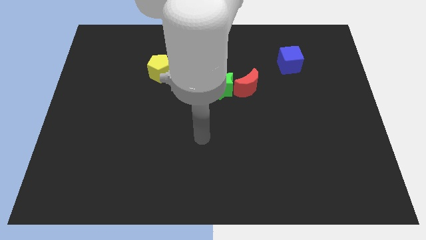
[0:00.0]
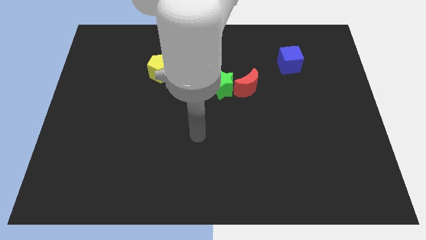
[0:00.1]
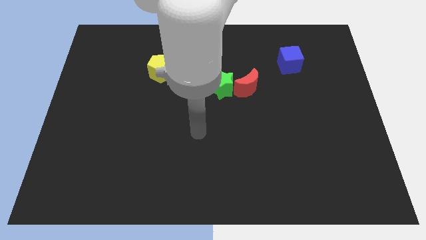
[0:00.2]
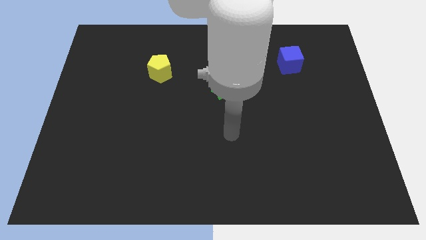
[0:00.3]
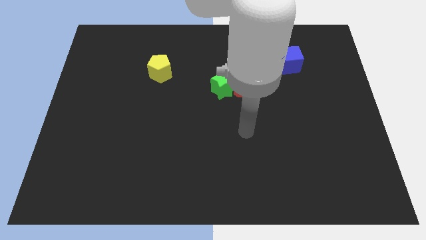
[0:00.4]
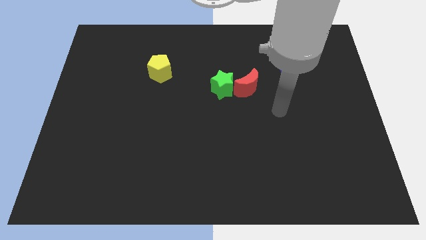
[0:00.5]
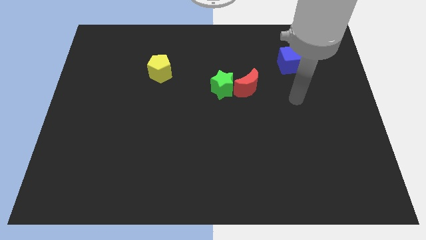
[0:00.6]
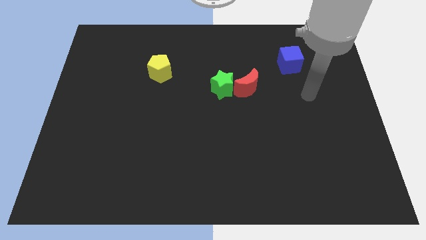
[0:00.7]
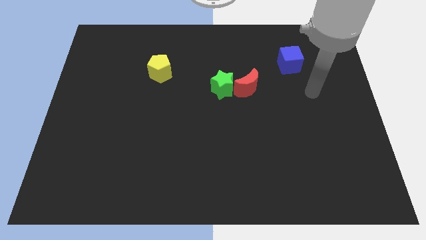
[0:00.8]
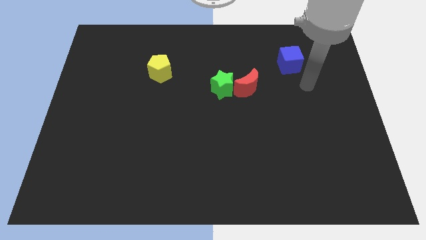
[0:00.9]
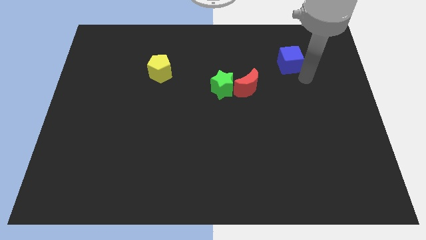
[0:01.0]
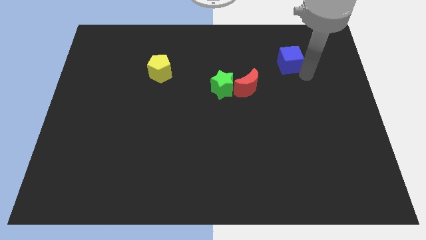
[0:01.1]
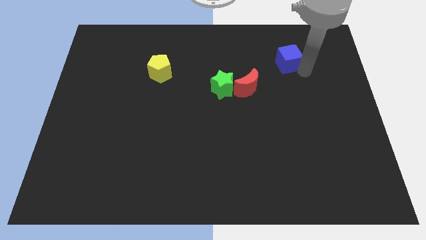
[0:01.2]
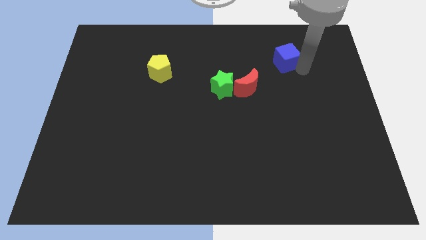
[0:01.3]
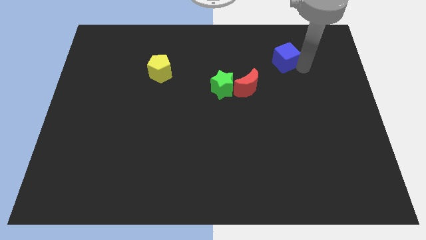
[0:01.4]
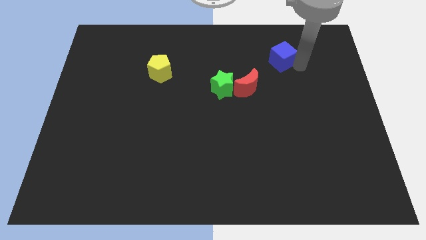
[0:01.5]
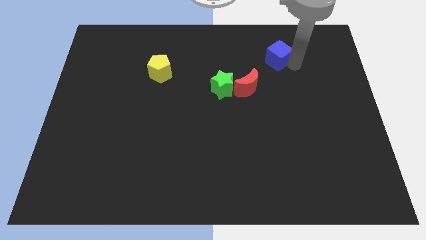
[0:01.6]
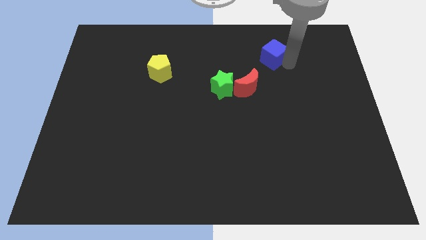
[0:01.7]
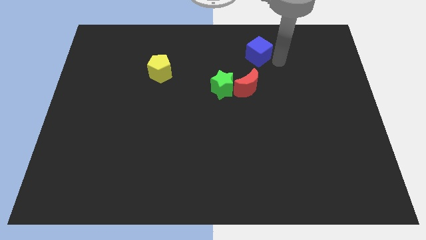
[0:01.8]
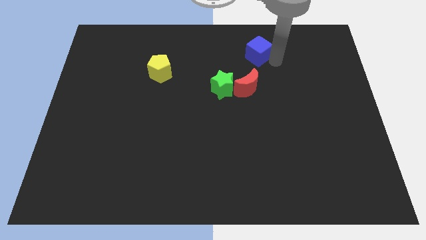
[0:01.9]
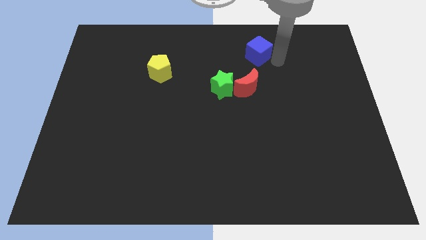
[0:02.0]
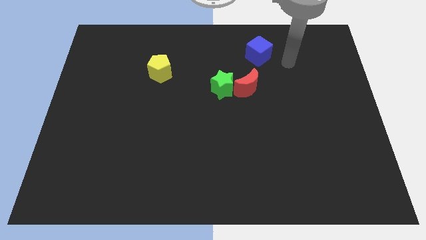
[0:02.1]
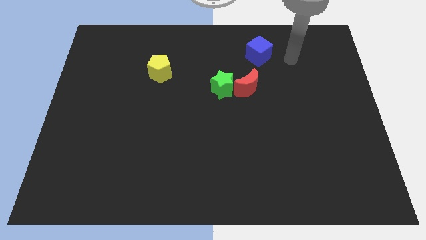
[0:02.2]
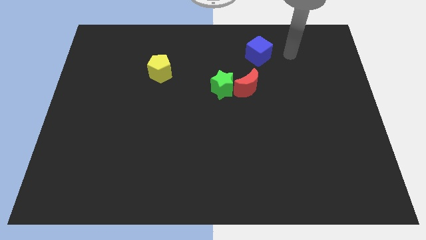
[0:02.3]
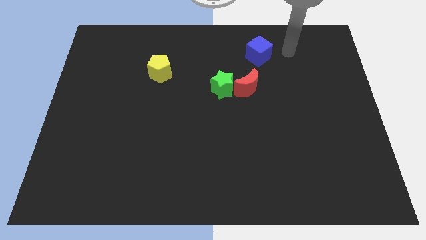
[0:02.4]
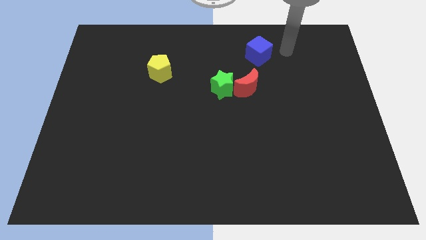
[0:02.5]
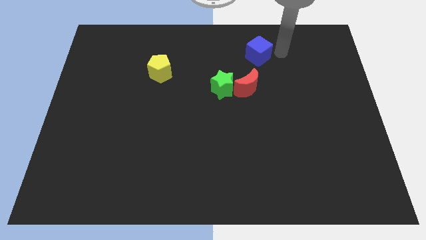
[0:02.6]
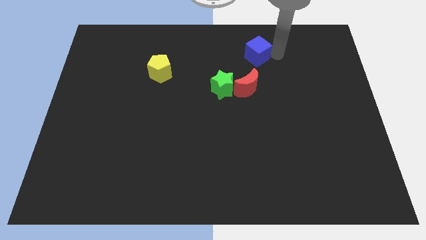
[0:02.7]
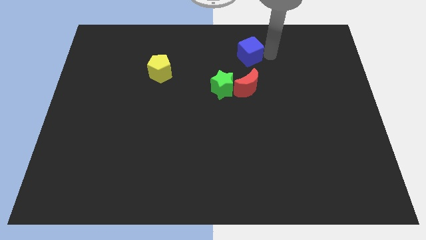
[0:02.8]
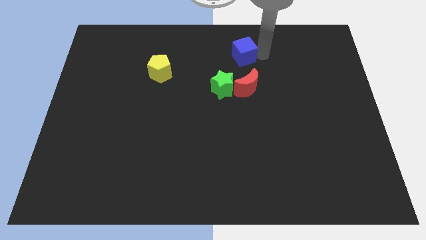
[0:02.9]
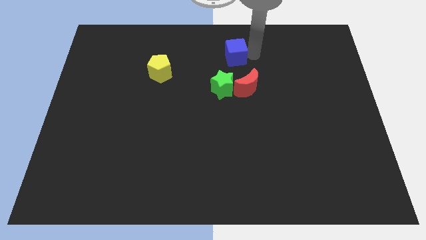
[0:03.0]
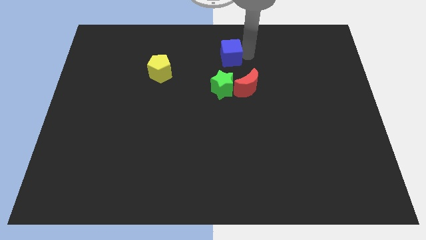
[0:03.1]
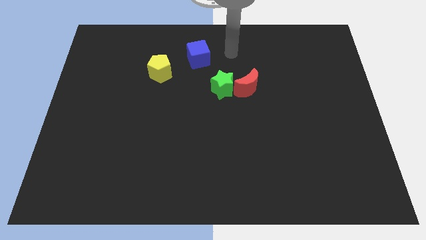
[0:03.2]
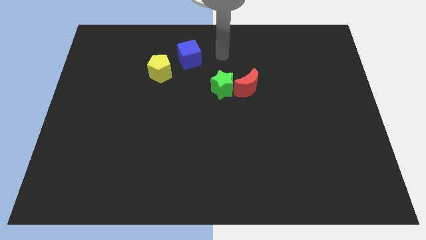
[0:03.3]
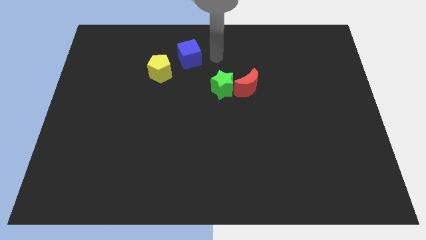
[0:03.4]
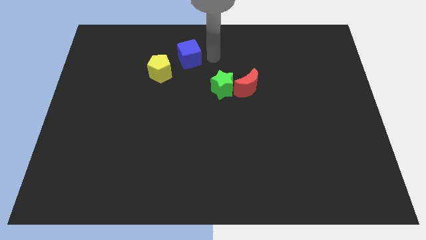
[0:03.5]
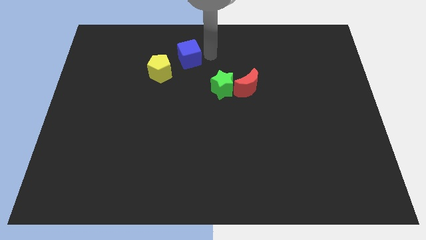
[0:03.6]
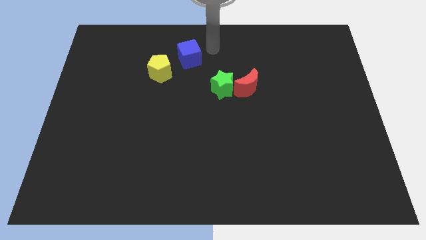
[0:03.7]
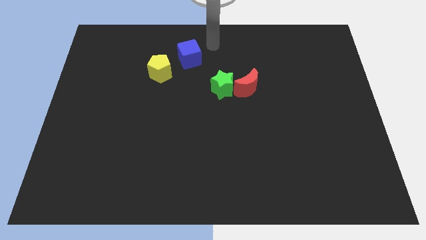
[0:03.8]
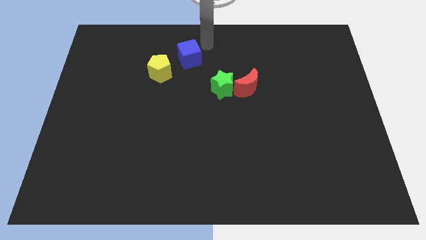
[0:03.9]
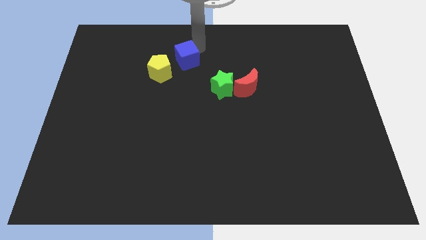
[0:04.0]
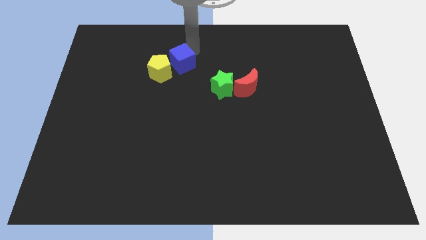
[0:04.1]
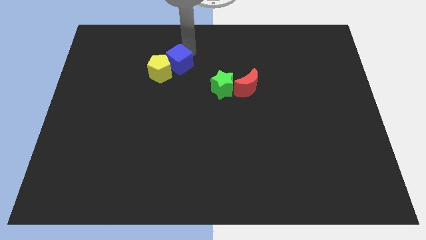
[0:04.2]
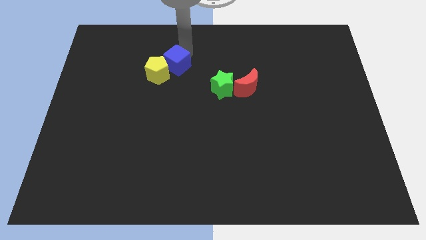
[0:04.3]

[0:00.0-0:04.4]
move the cube towards the pentagon

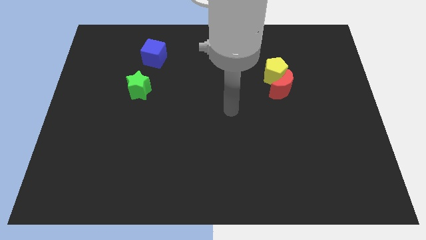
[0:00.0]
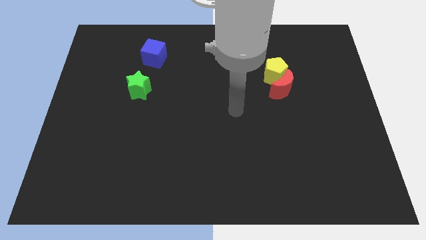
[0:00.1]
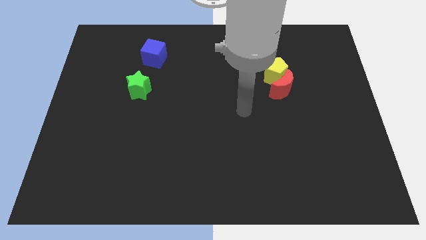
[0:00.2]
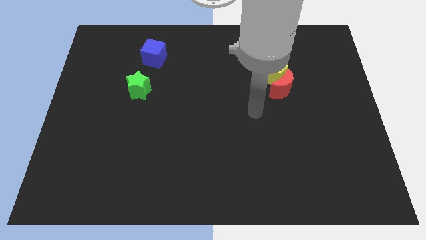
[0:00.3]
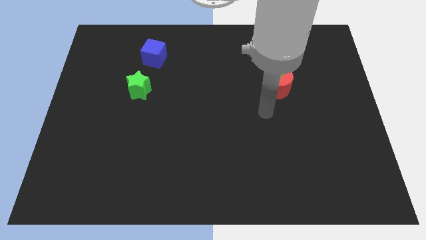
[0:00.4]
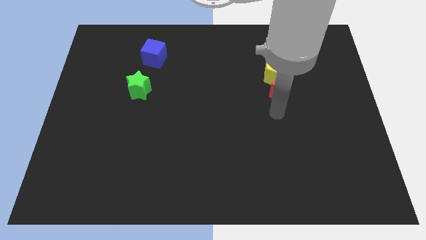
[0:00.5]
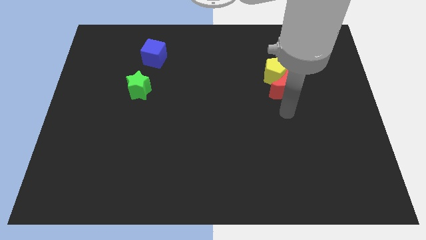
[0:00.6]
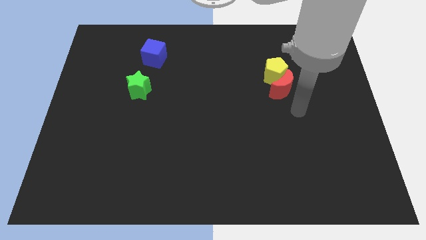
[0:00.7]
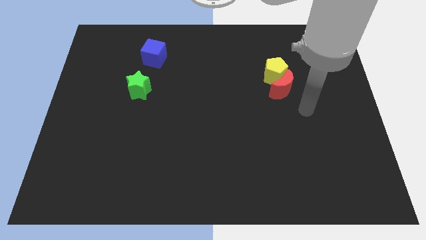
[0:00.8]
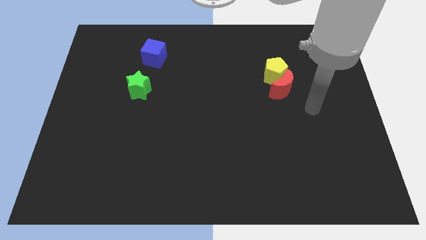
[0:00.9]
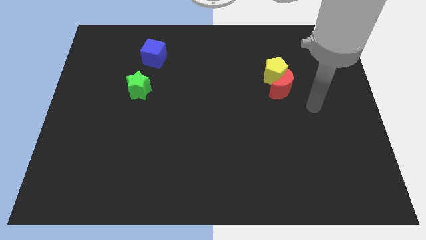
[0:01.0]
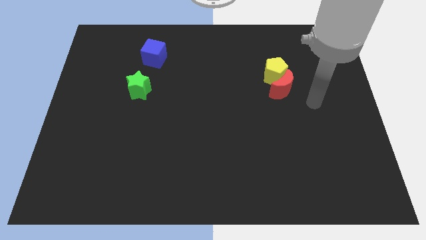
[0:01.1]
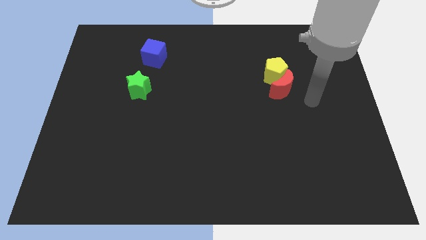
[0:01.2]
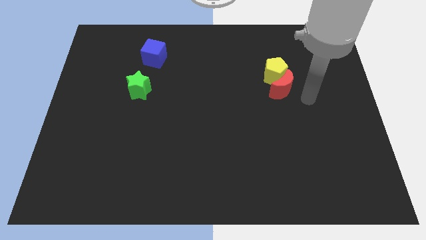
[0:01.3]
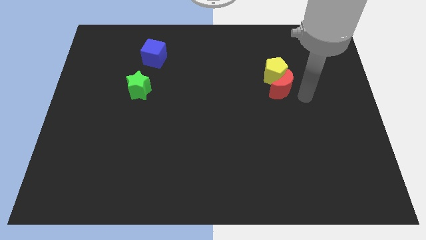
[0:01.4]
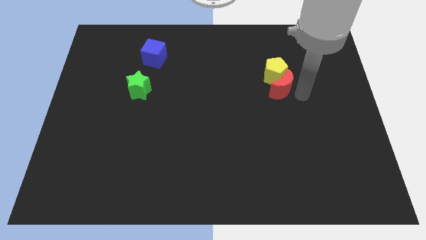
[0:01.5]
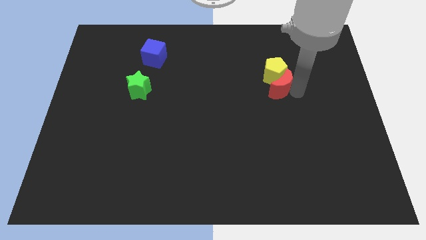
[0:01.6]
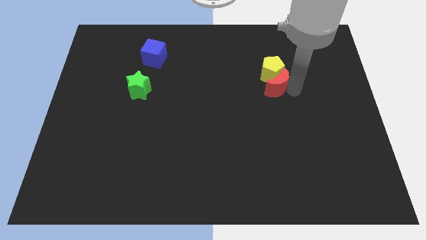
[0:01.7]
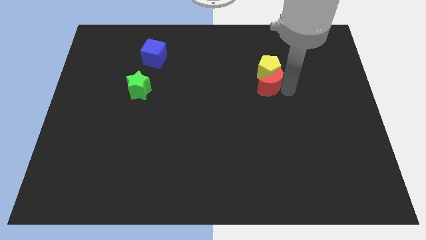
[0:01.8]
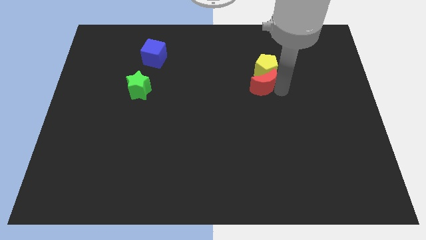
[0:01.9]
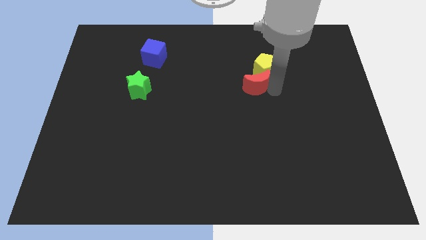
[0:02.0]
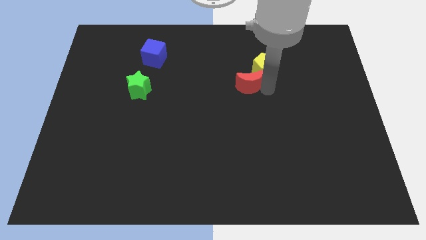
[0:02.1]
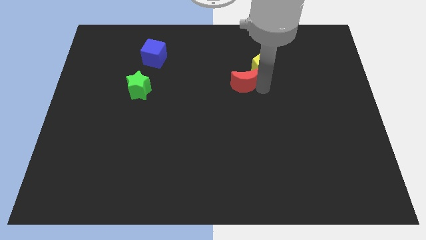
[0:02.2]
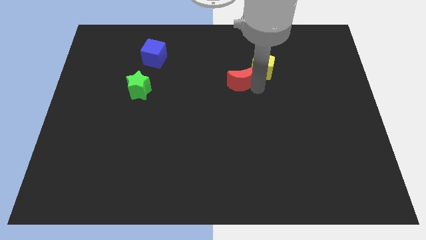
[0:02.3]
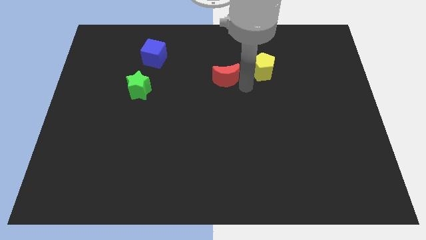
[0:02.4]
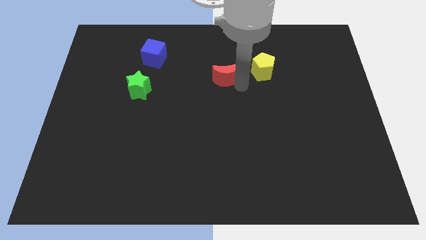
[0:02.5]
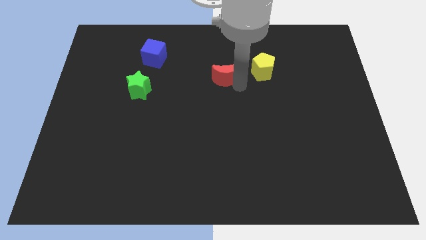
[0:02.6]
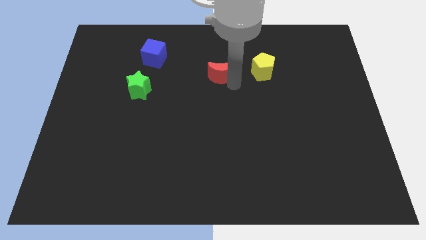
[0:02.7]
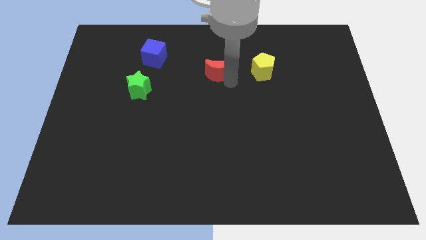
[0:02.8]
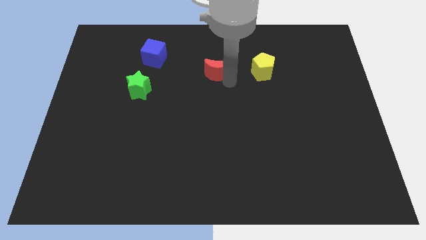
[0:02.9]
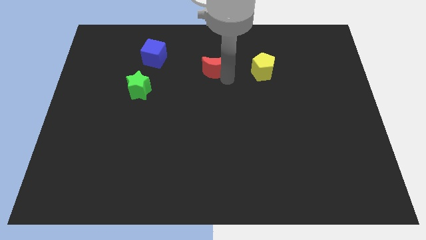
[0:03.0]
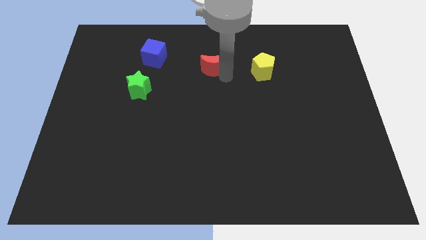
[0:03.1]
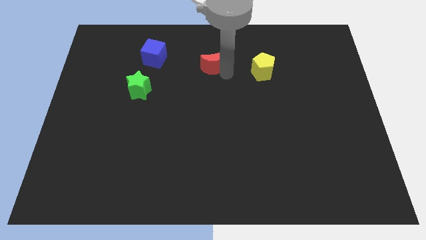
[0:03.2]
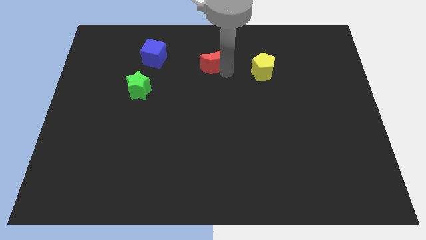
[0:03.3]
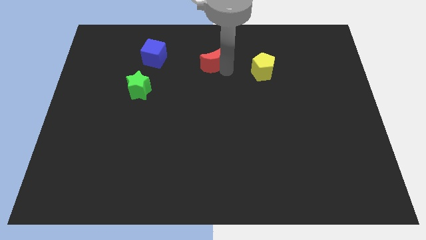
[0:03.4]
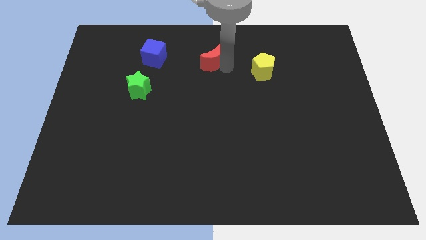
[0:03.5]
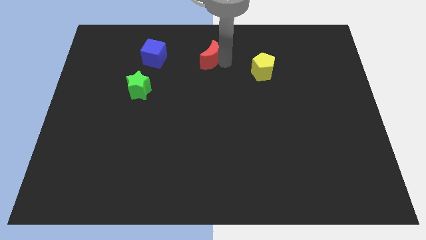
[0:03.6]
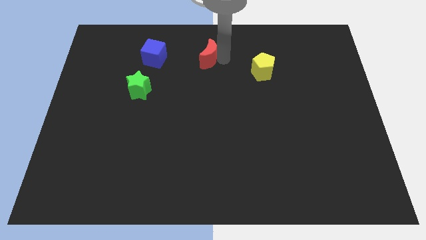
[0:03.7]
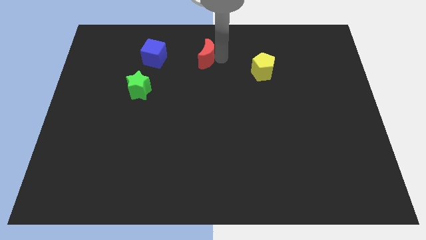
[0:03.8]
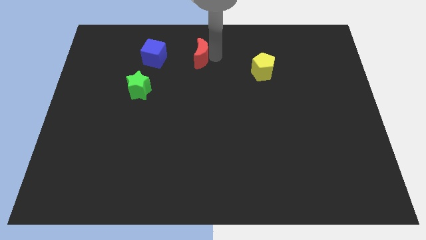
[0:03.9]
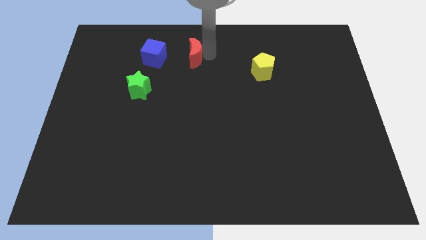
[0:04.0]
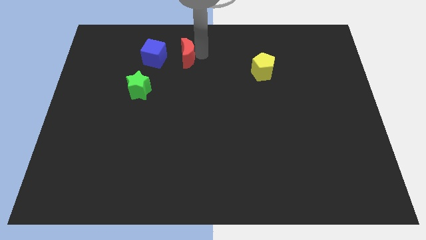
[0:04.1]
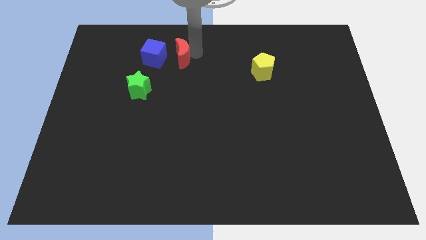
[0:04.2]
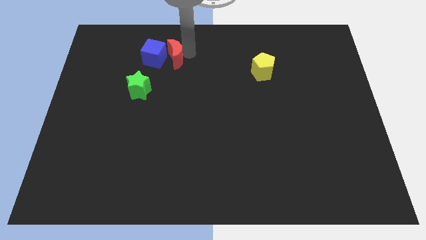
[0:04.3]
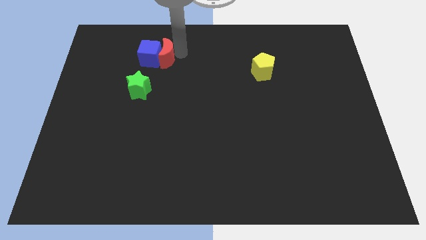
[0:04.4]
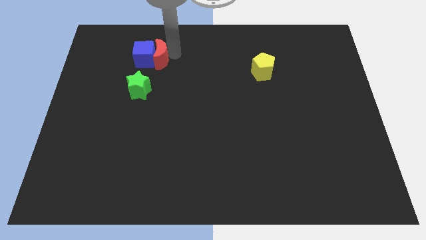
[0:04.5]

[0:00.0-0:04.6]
move the red moon towards the blue block
